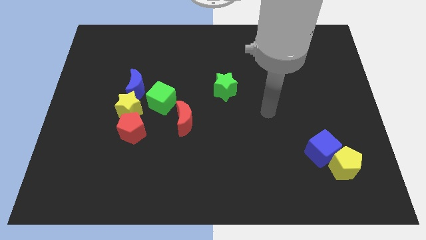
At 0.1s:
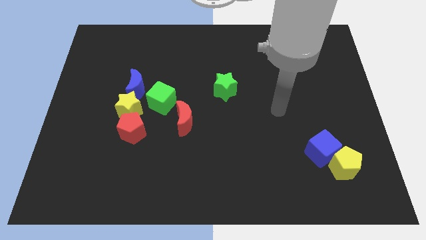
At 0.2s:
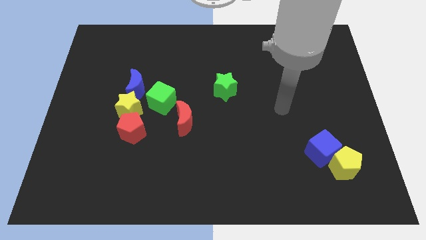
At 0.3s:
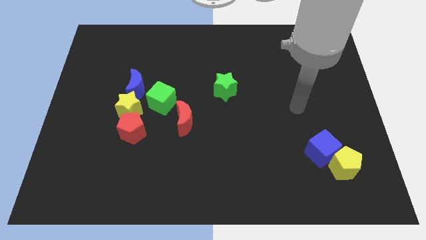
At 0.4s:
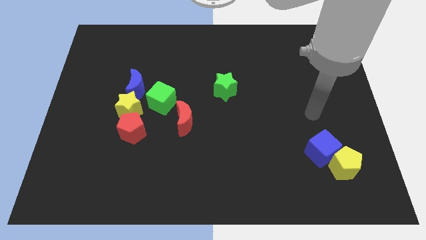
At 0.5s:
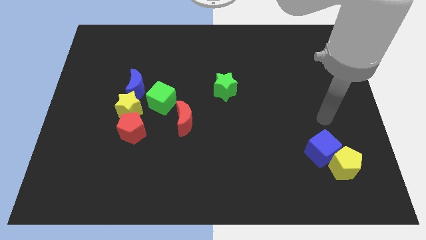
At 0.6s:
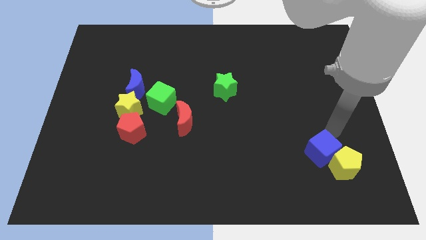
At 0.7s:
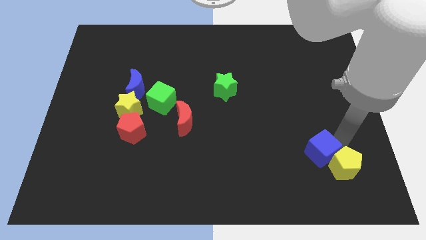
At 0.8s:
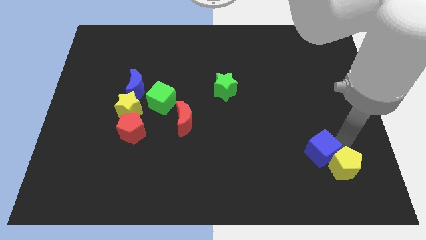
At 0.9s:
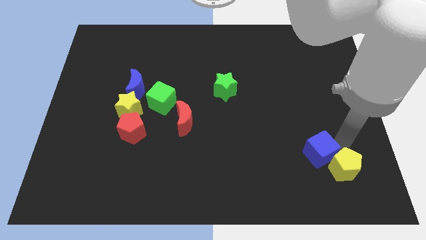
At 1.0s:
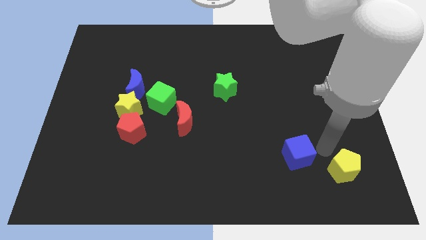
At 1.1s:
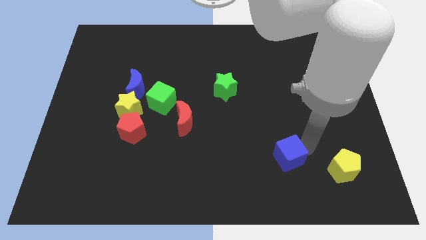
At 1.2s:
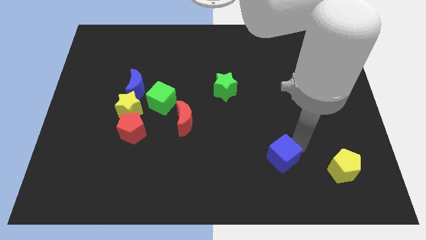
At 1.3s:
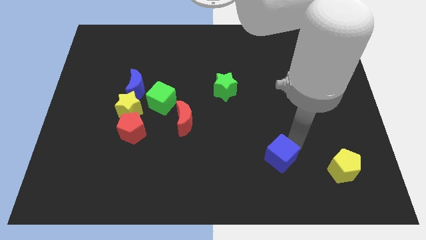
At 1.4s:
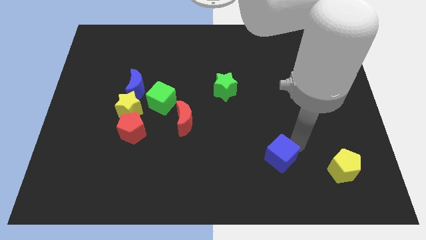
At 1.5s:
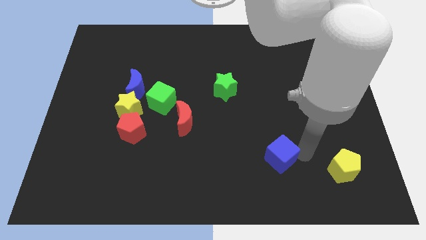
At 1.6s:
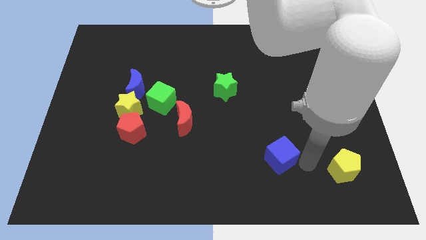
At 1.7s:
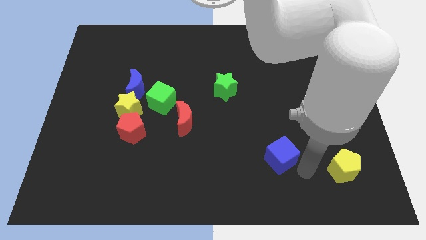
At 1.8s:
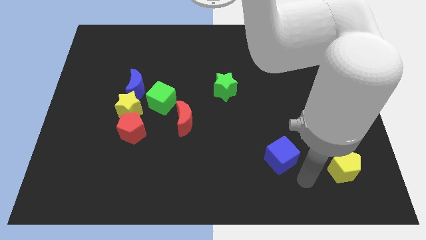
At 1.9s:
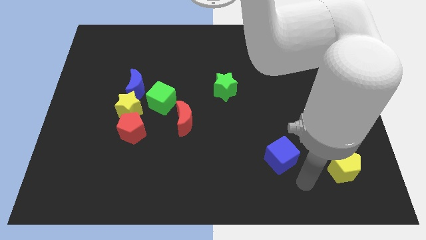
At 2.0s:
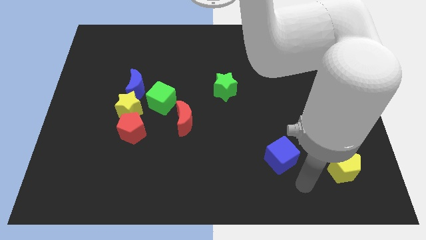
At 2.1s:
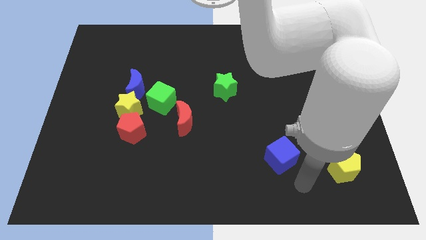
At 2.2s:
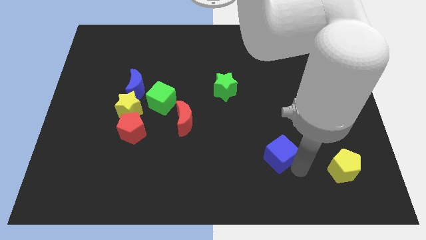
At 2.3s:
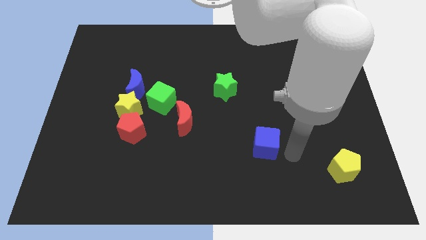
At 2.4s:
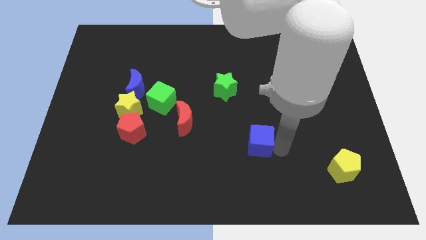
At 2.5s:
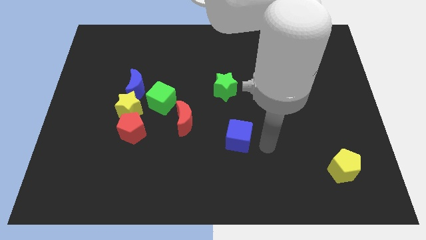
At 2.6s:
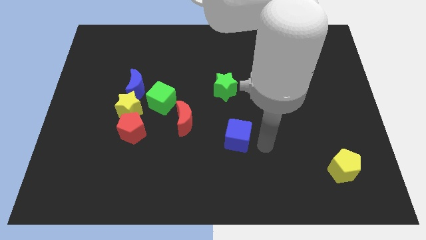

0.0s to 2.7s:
separate the blue cube from the yellow pentagon

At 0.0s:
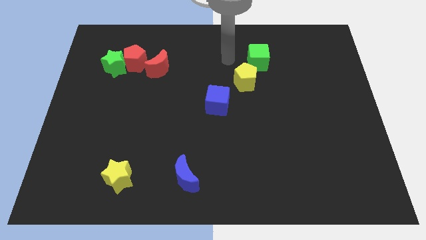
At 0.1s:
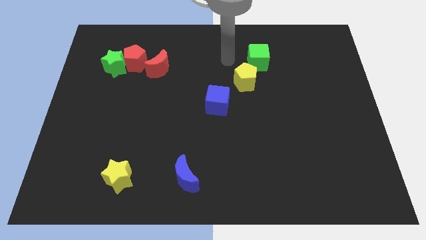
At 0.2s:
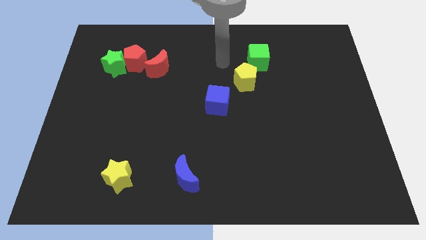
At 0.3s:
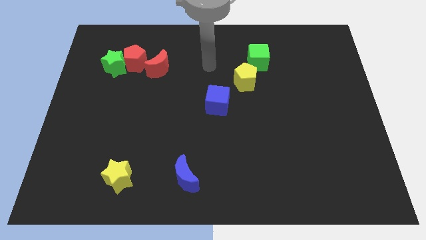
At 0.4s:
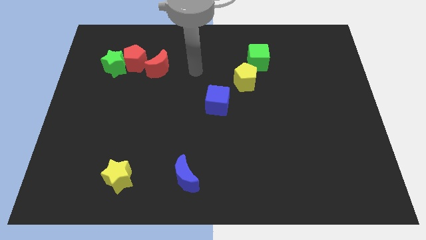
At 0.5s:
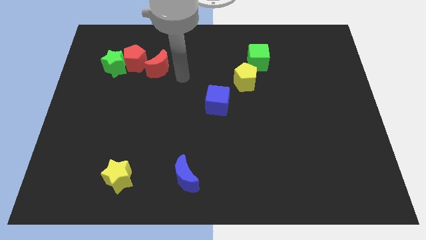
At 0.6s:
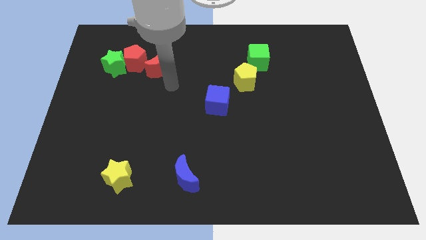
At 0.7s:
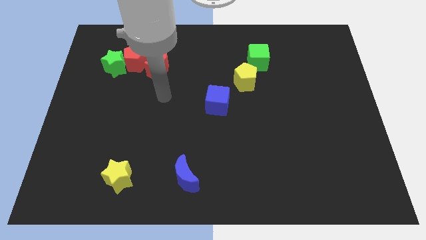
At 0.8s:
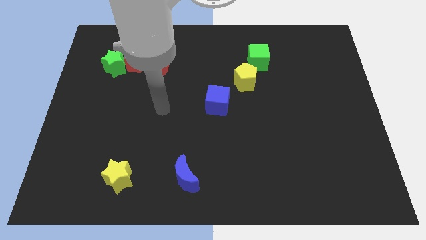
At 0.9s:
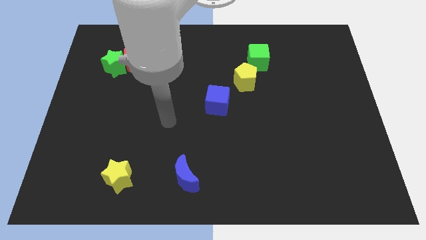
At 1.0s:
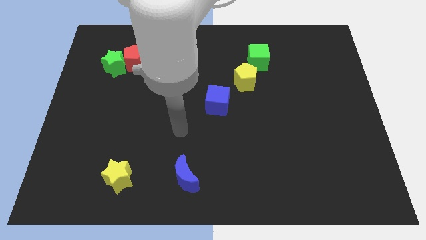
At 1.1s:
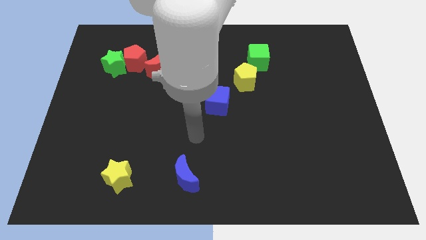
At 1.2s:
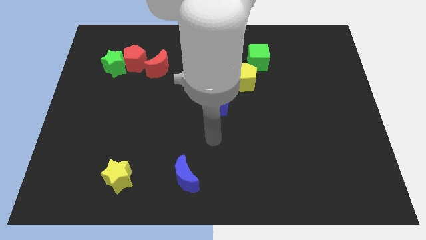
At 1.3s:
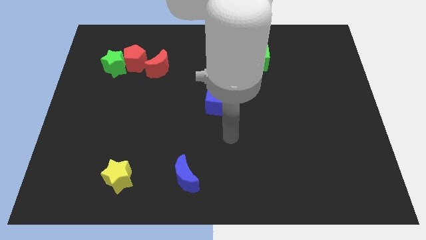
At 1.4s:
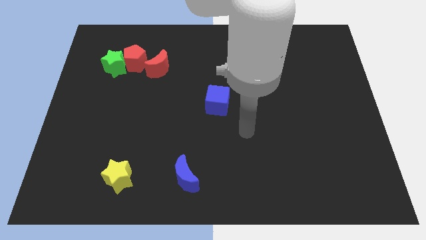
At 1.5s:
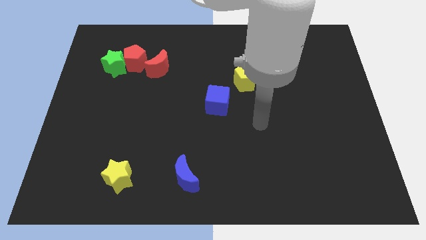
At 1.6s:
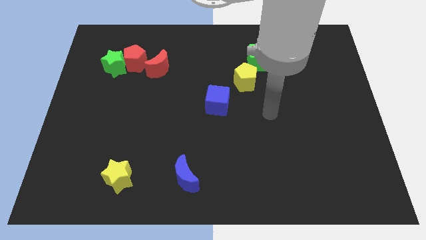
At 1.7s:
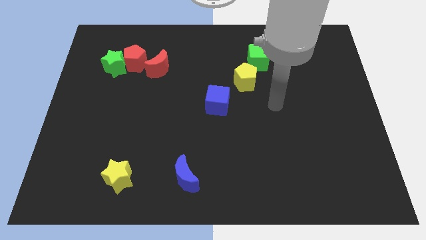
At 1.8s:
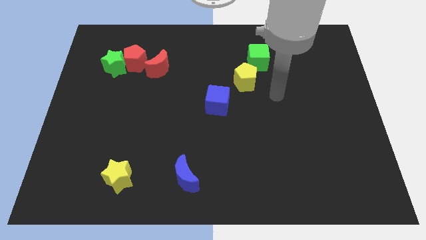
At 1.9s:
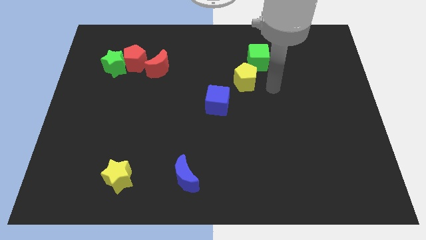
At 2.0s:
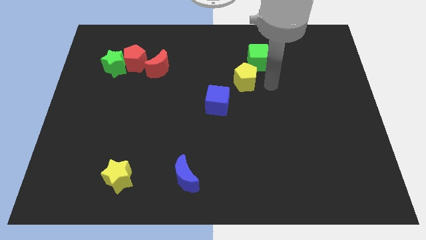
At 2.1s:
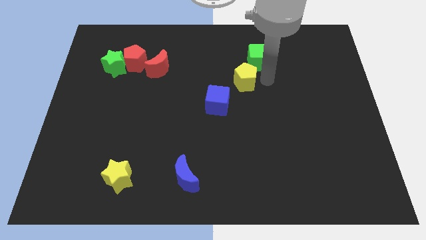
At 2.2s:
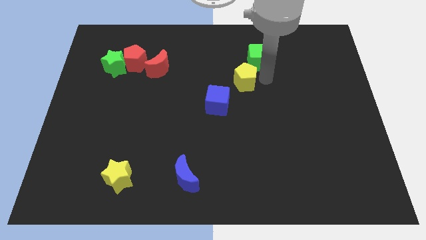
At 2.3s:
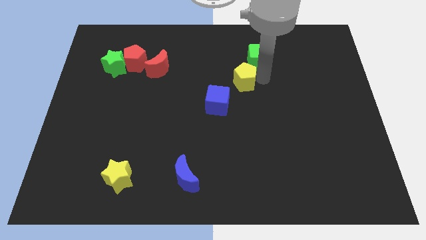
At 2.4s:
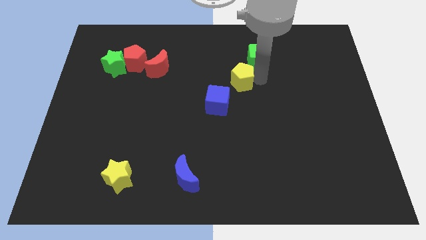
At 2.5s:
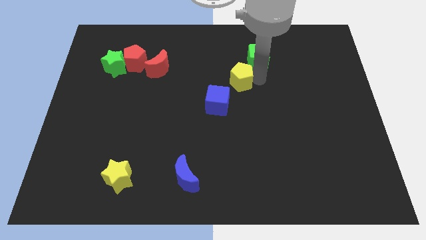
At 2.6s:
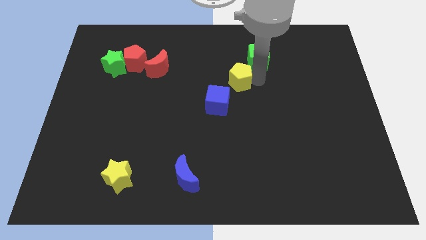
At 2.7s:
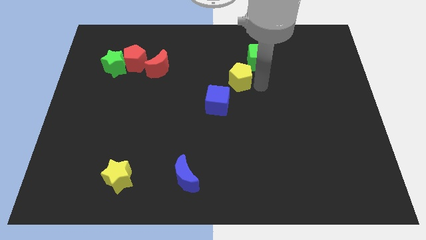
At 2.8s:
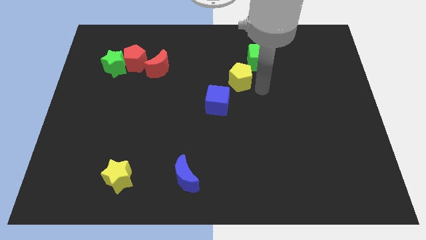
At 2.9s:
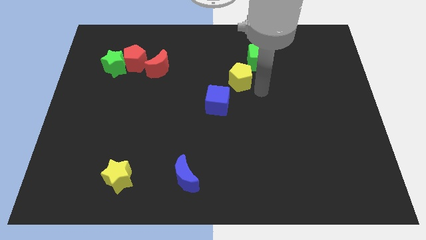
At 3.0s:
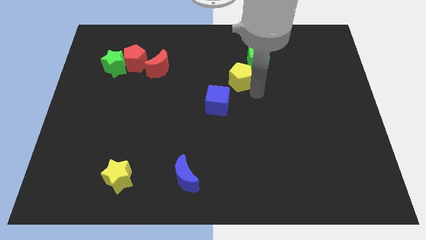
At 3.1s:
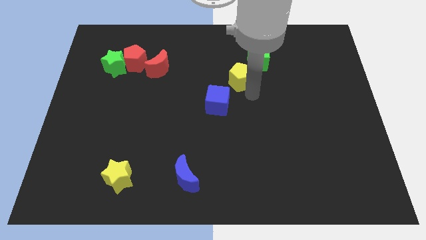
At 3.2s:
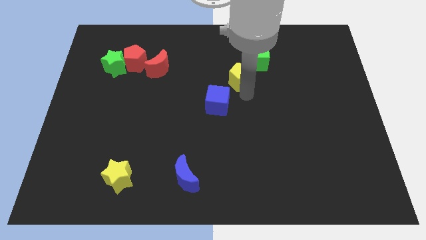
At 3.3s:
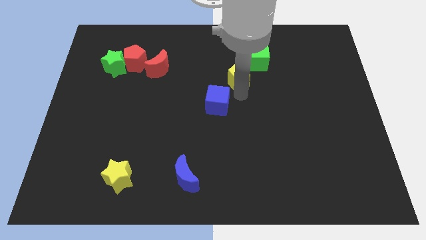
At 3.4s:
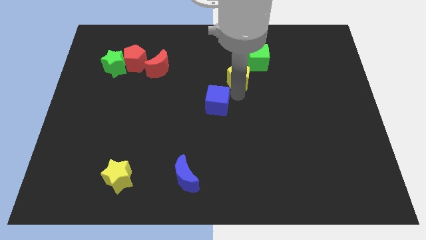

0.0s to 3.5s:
push the yellow pentagon slightly to the left

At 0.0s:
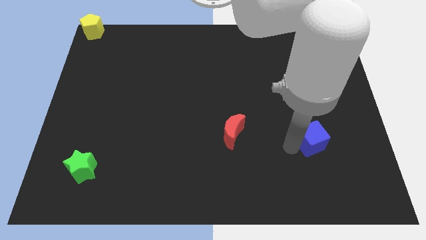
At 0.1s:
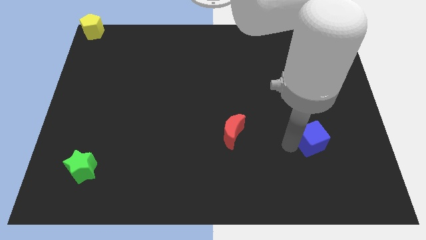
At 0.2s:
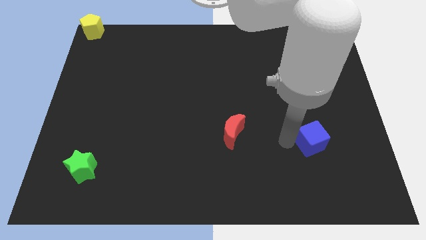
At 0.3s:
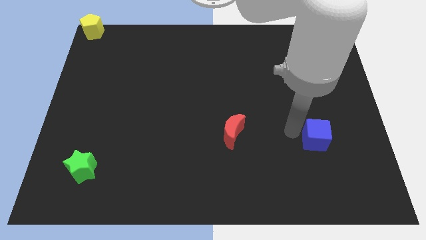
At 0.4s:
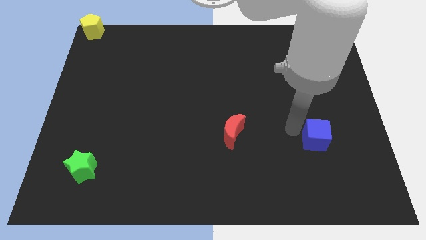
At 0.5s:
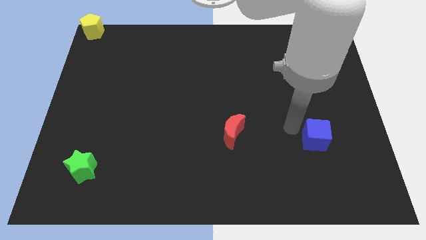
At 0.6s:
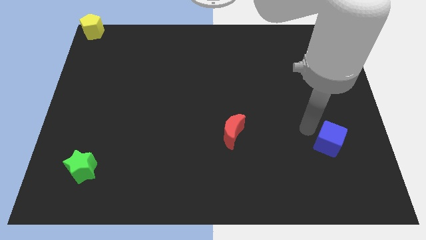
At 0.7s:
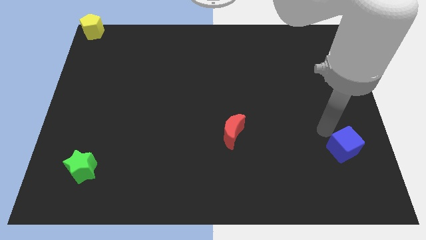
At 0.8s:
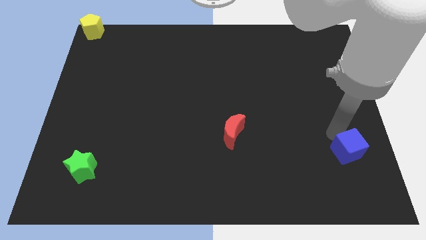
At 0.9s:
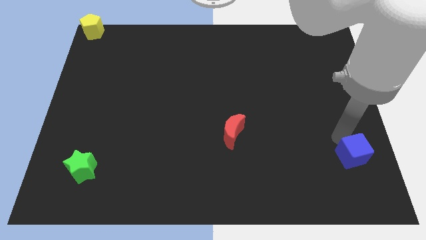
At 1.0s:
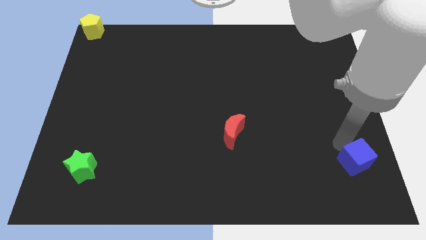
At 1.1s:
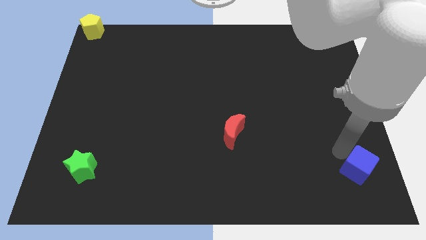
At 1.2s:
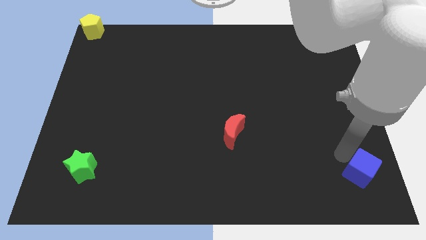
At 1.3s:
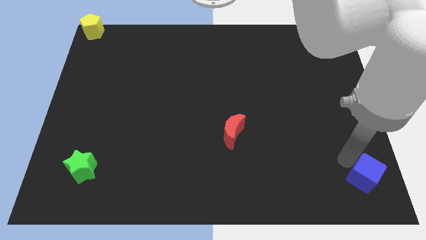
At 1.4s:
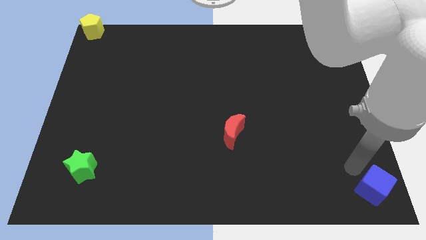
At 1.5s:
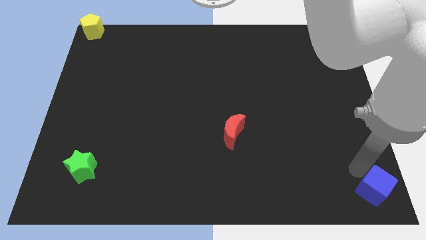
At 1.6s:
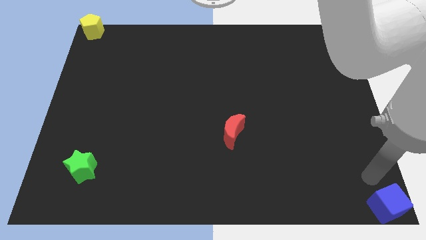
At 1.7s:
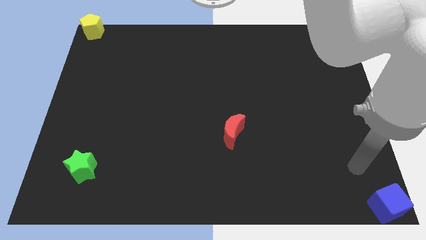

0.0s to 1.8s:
move the blue cube to the bottom right corner of the table

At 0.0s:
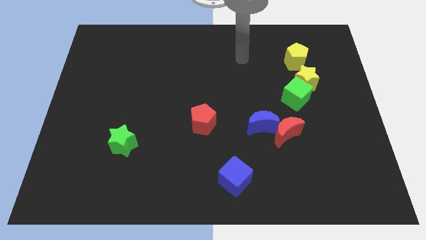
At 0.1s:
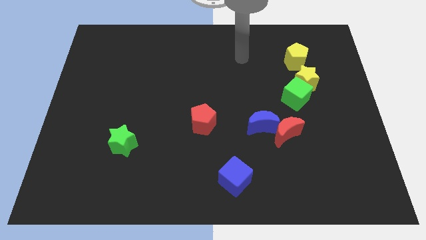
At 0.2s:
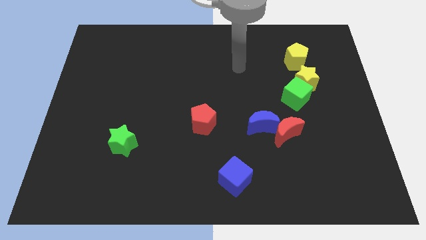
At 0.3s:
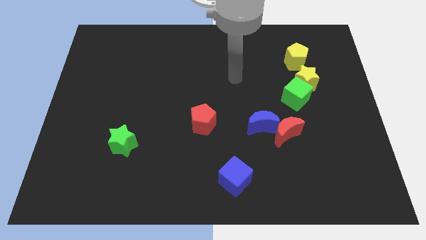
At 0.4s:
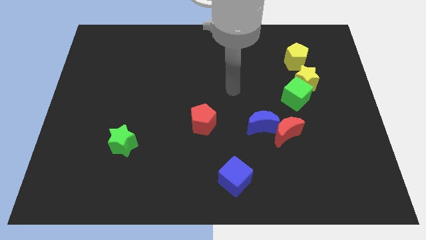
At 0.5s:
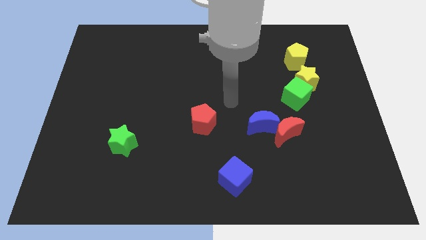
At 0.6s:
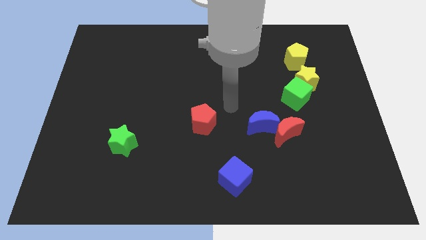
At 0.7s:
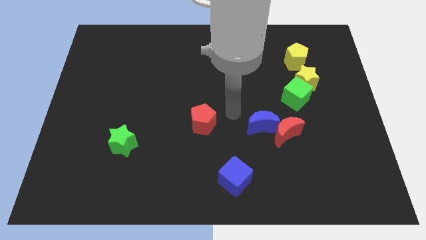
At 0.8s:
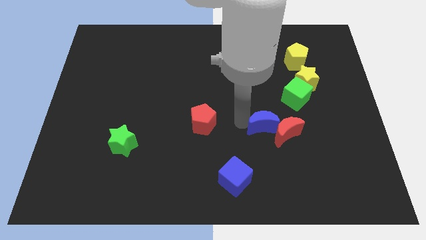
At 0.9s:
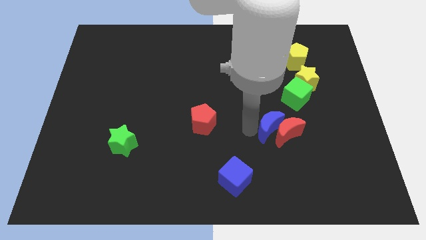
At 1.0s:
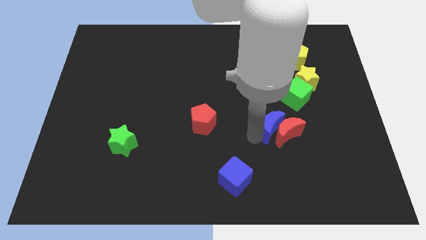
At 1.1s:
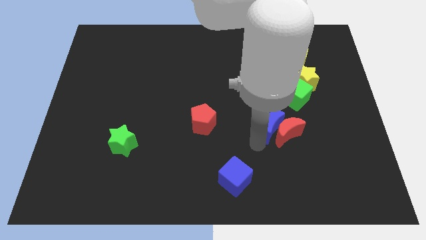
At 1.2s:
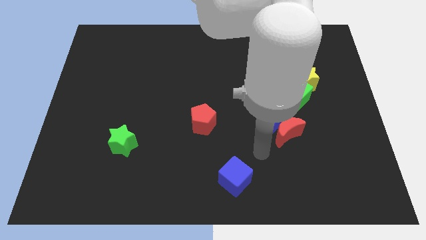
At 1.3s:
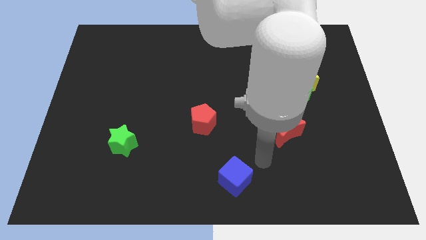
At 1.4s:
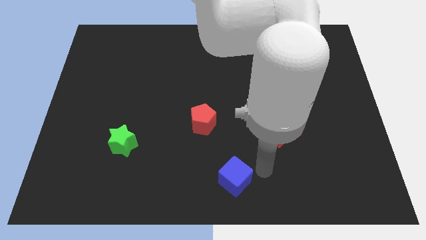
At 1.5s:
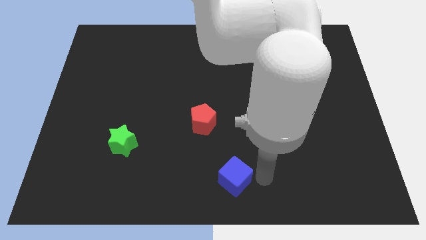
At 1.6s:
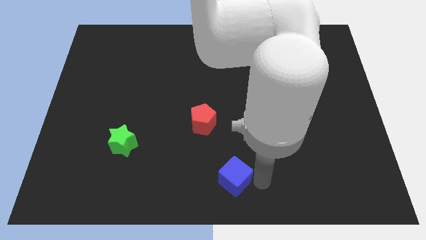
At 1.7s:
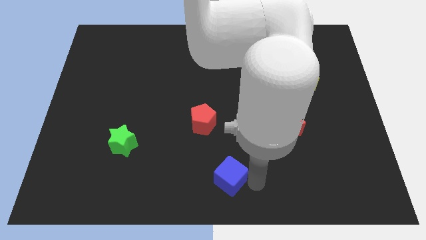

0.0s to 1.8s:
move your arm to the right of blue cube
